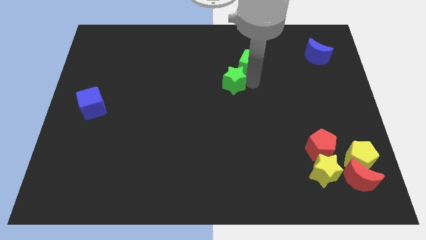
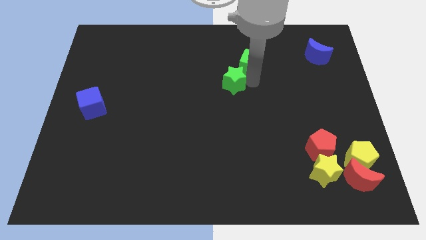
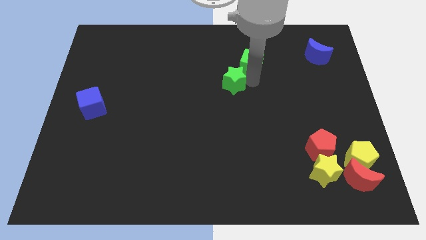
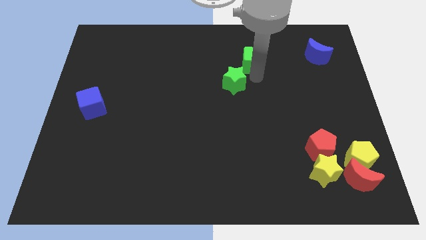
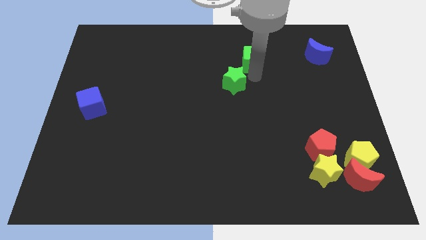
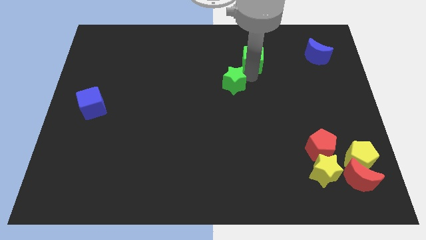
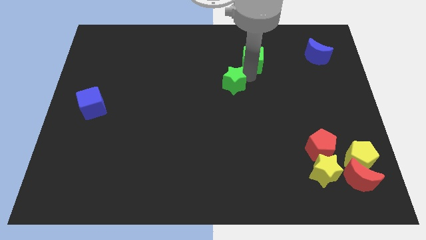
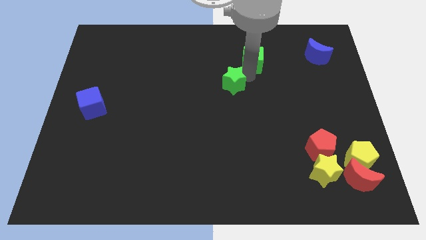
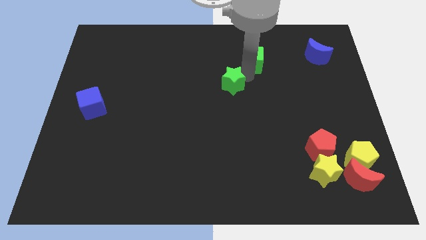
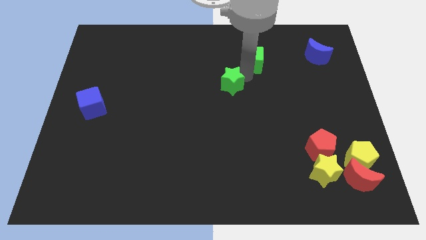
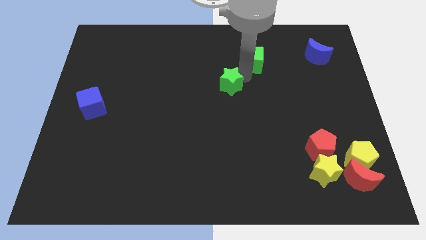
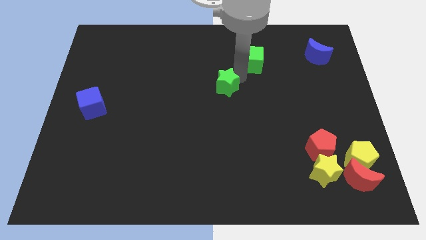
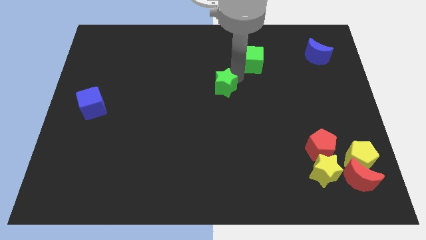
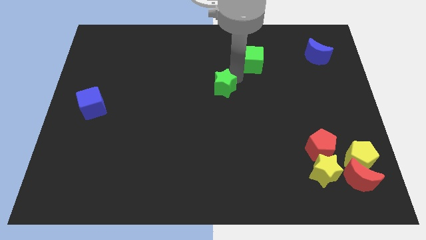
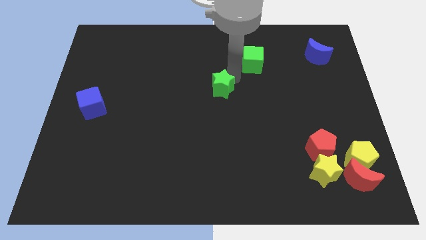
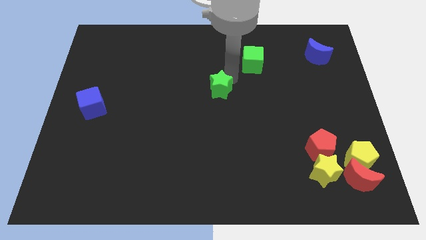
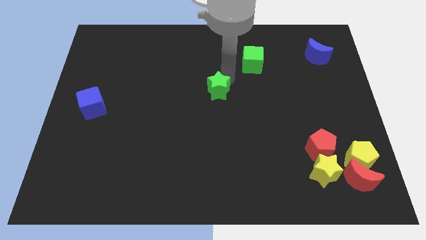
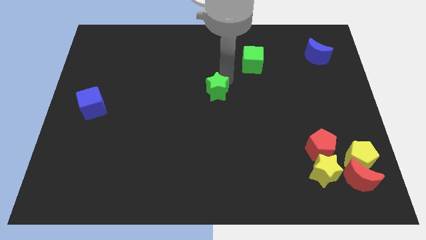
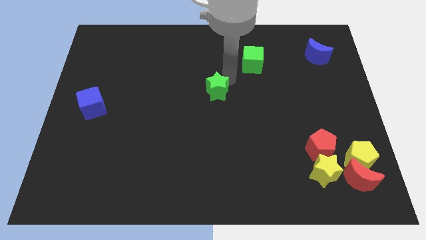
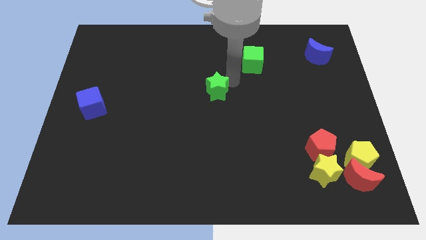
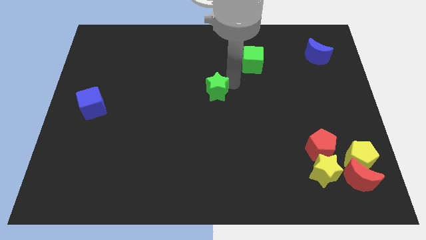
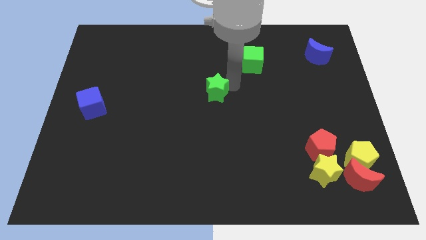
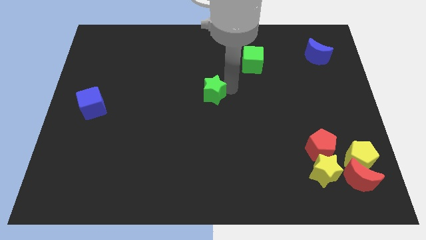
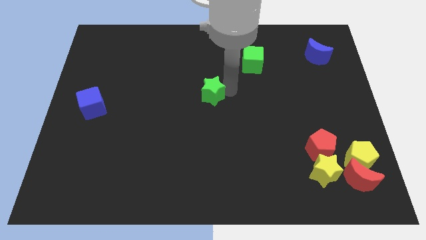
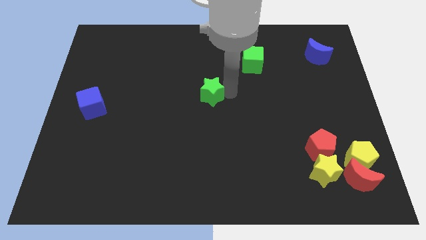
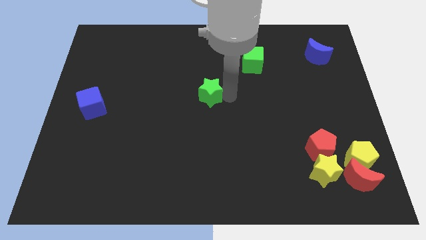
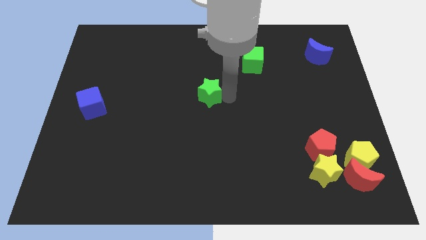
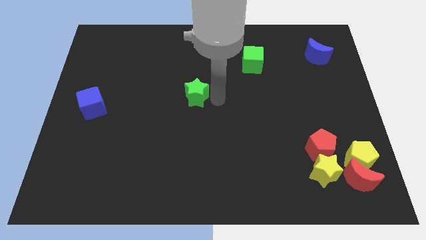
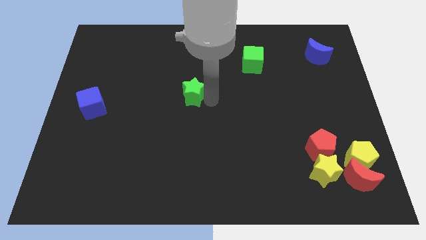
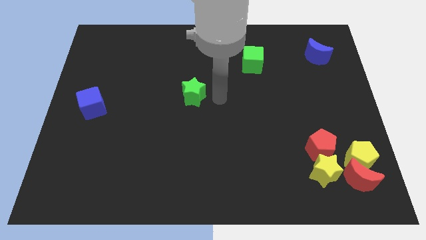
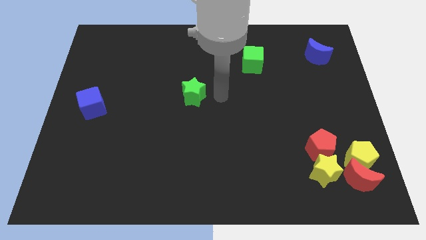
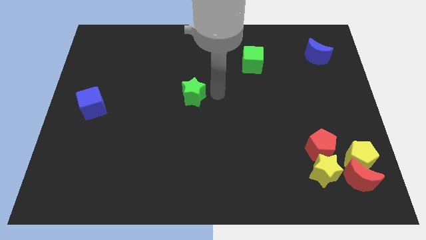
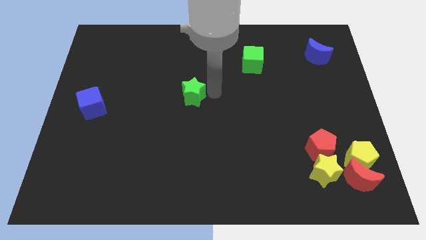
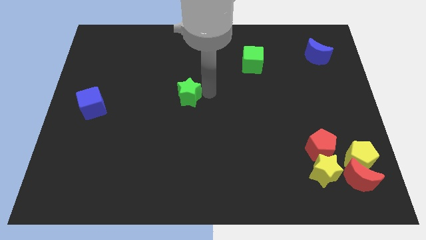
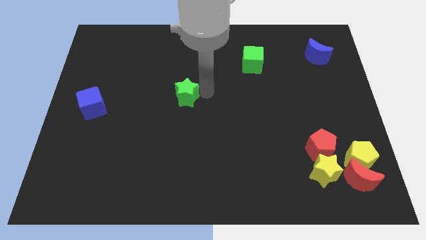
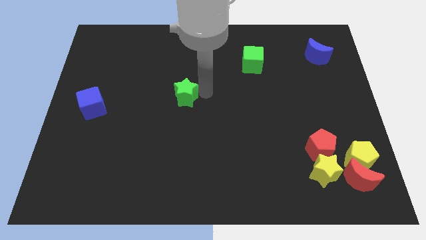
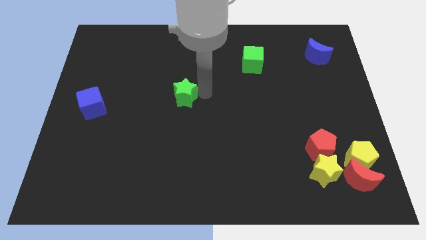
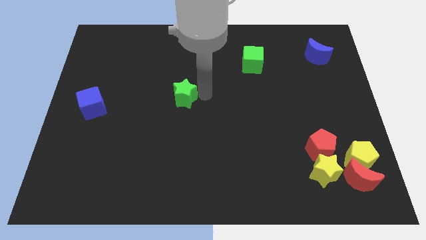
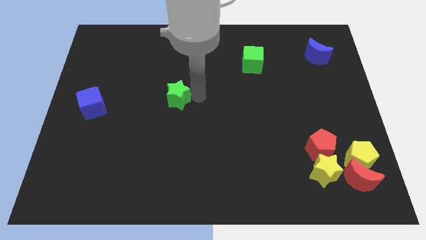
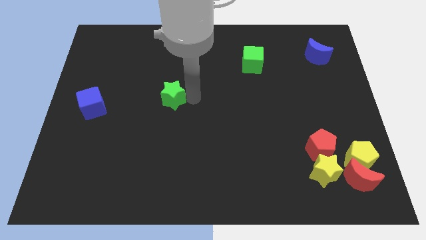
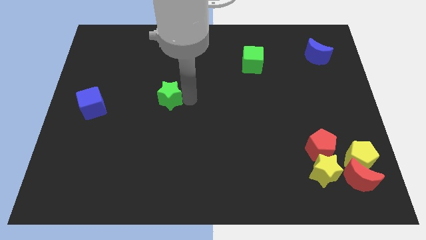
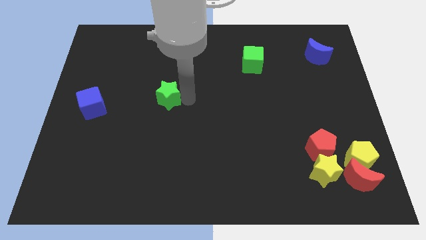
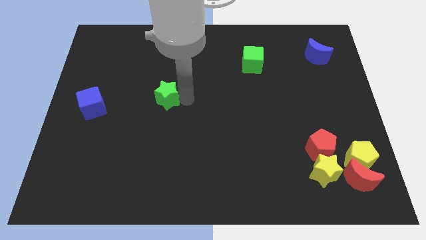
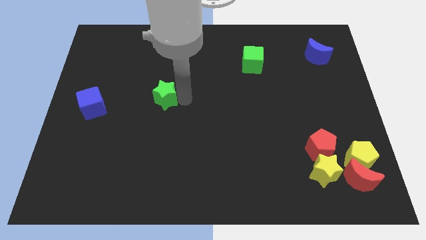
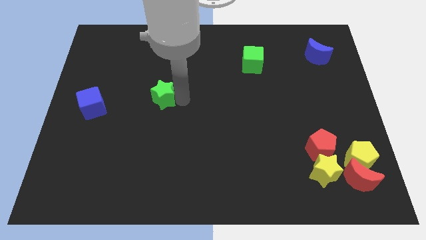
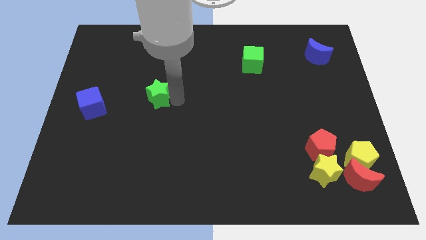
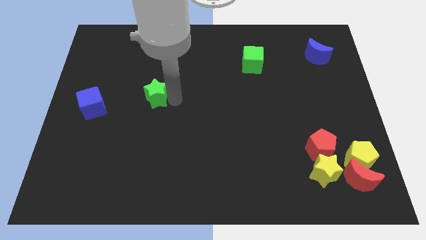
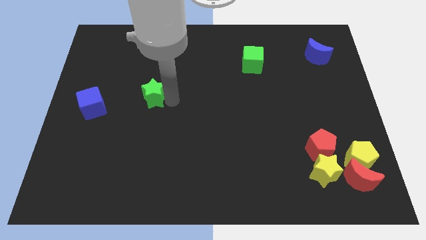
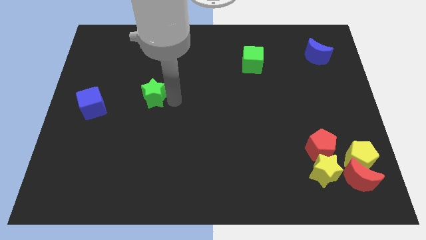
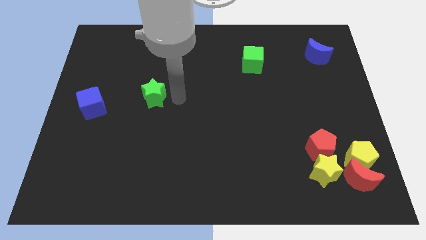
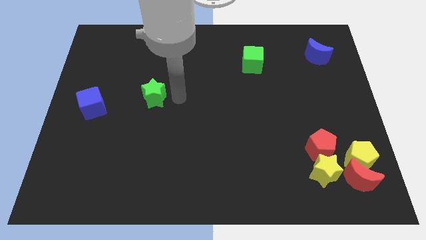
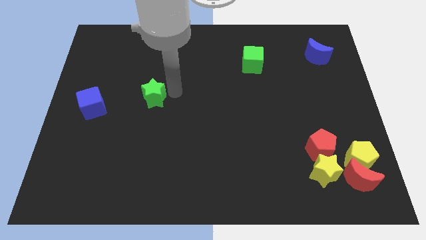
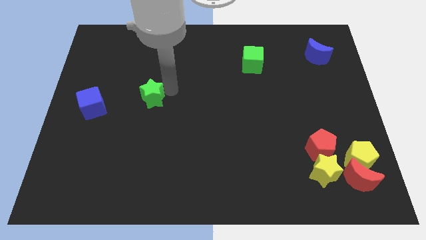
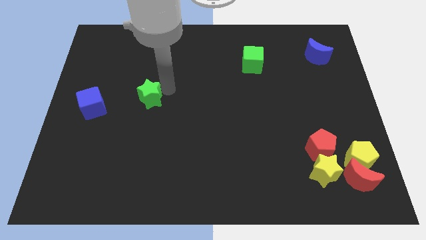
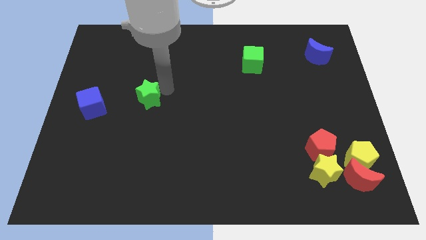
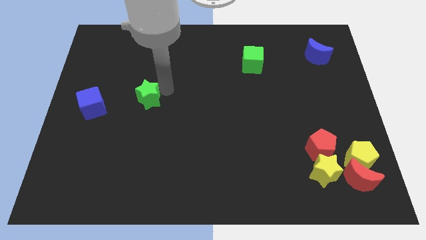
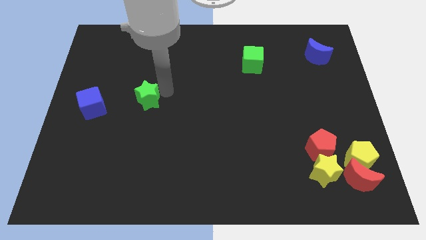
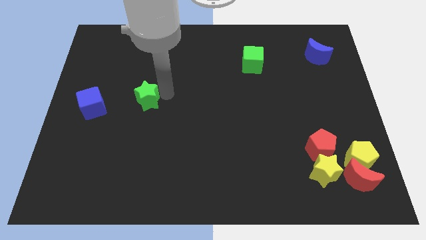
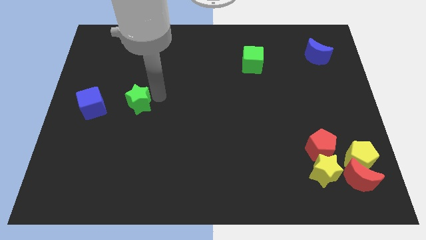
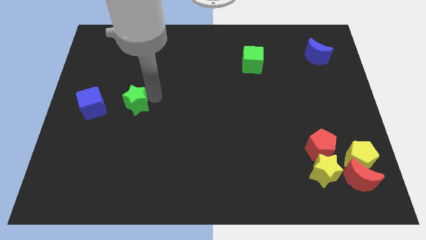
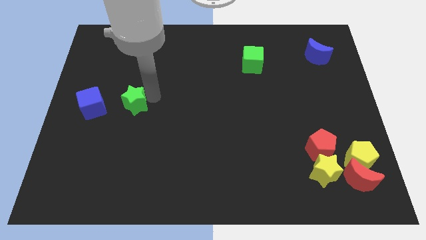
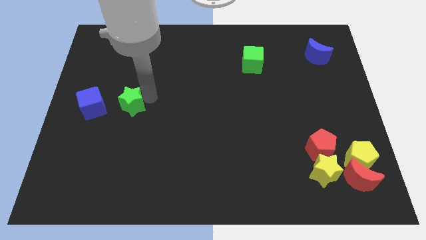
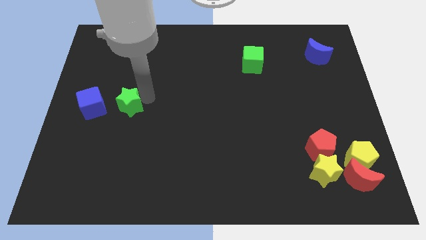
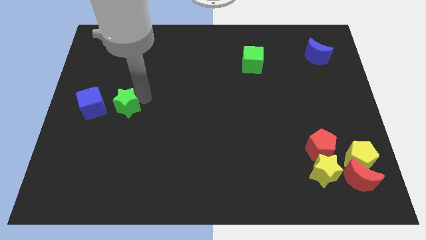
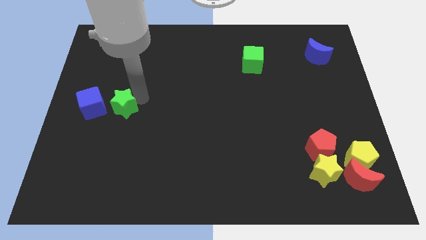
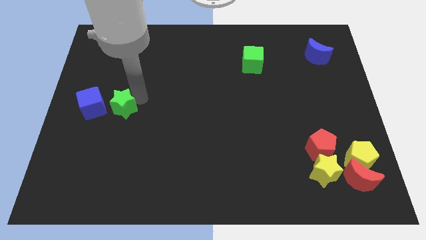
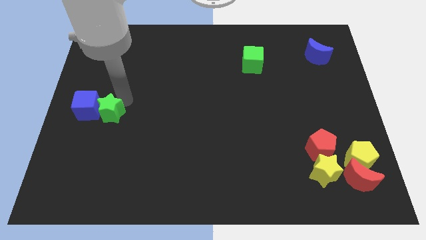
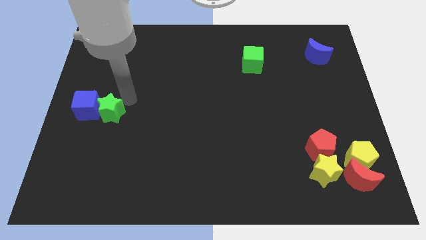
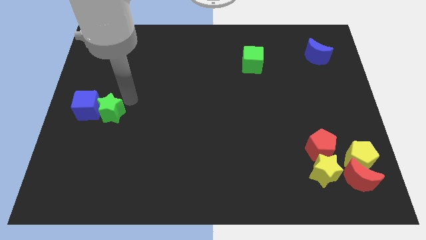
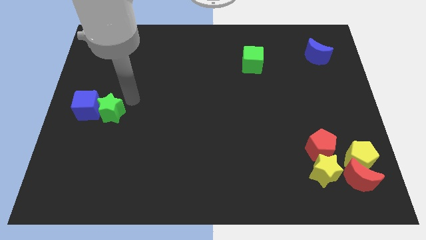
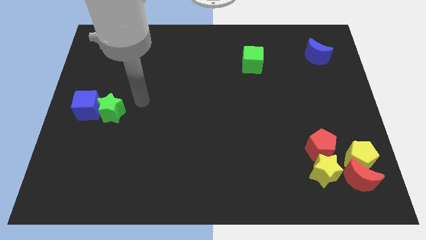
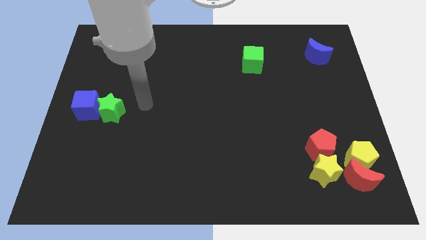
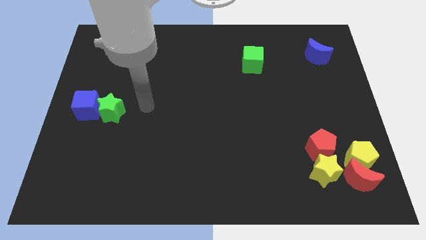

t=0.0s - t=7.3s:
move green star into right of blue cube

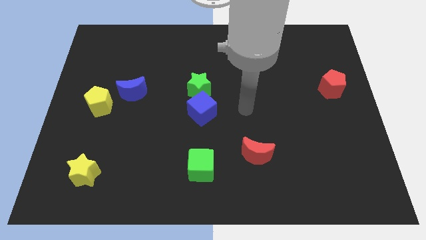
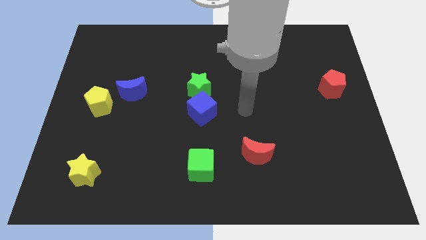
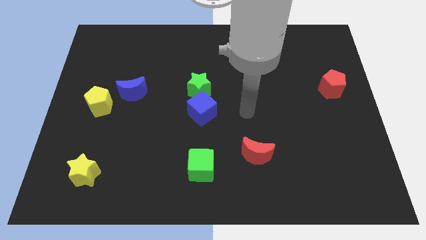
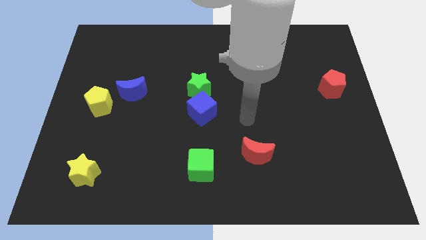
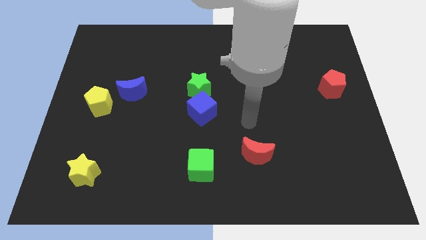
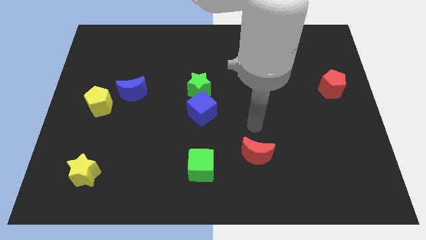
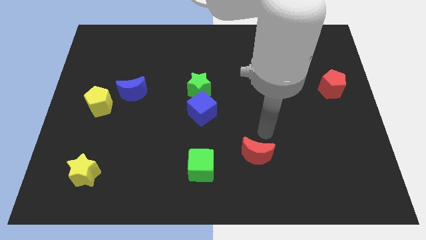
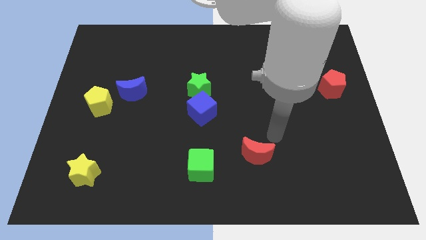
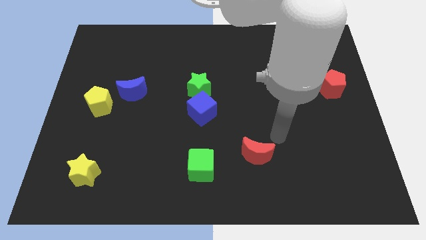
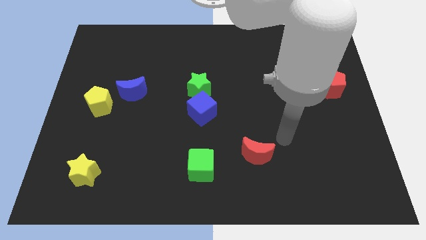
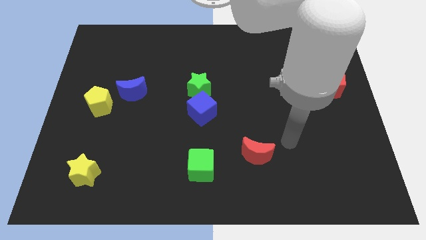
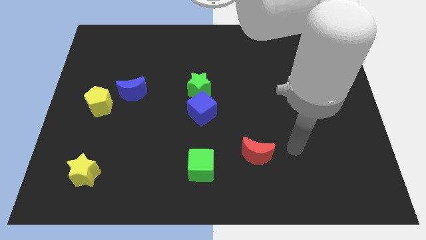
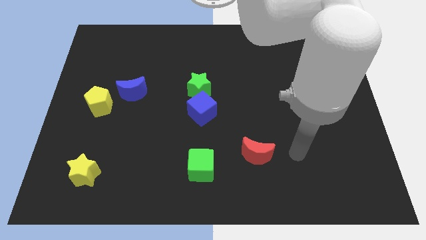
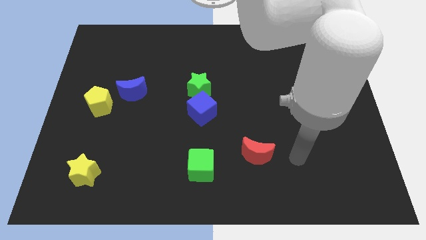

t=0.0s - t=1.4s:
place your hand parallel right to the red moon

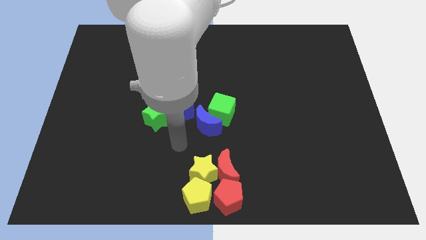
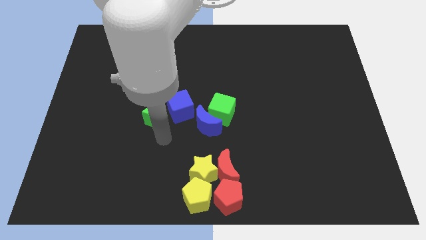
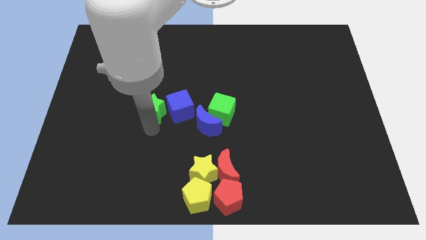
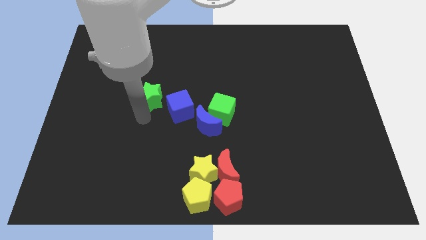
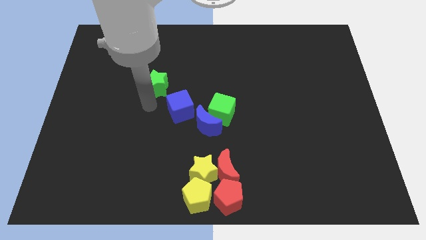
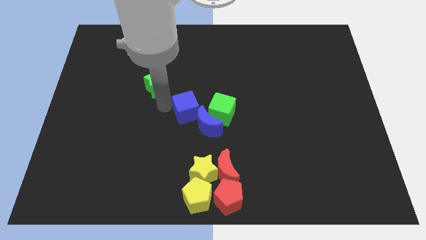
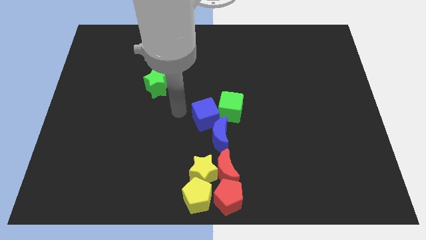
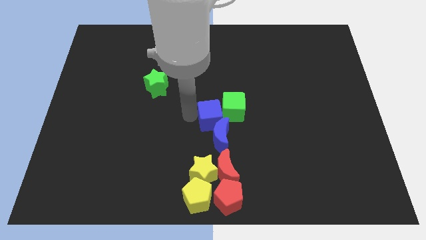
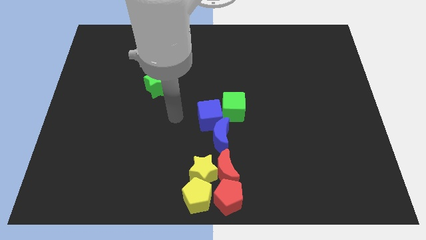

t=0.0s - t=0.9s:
separate green star and blue cube
